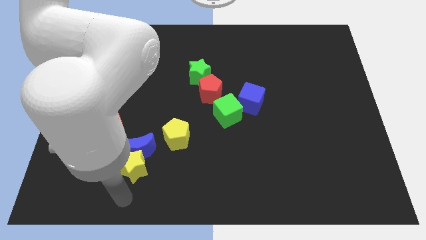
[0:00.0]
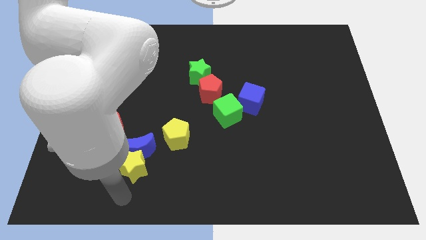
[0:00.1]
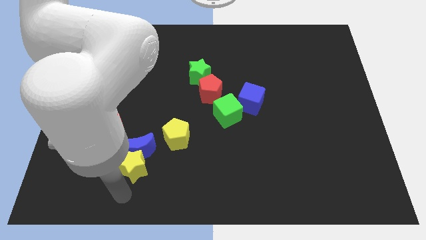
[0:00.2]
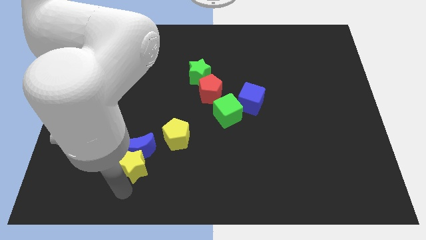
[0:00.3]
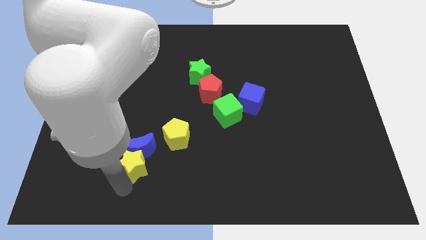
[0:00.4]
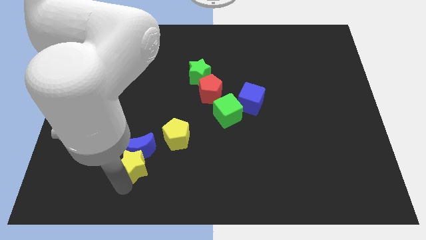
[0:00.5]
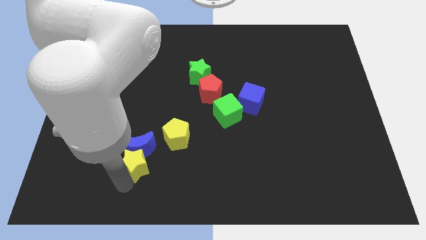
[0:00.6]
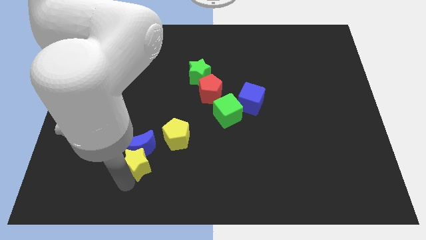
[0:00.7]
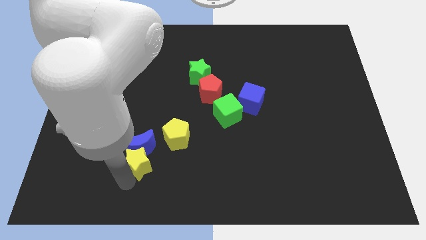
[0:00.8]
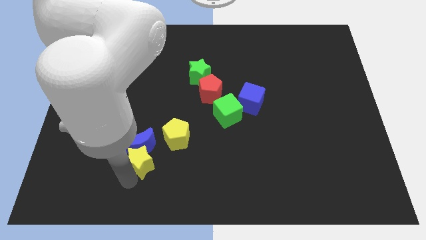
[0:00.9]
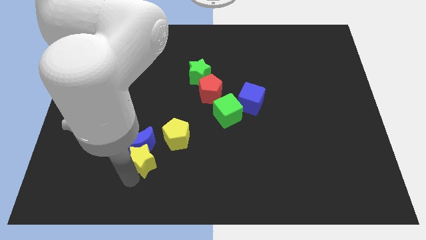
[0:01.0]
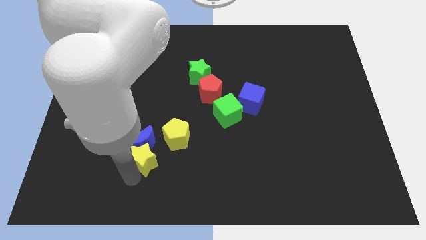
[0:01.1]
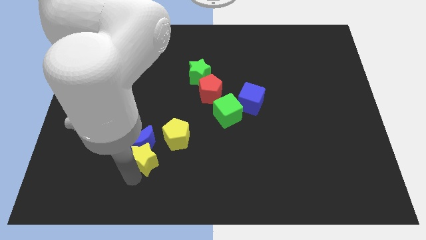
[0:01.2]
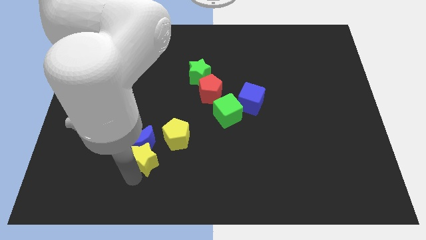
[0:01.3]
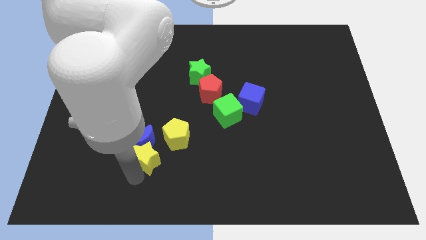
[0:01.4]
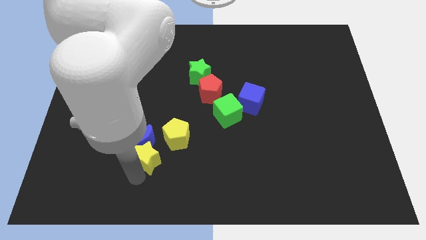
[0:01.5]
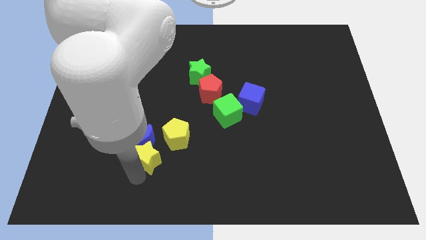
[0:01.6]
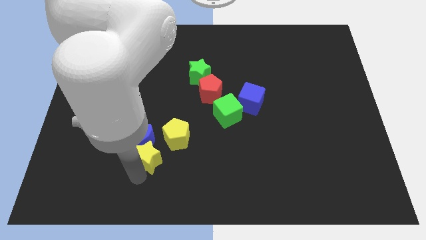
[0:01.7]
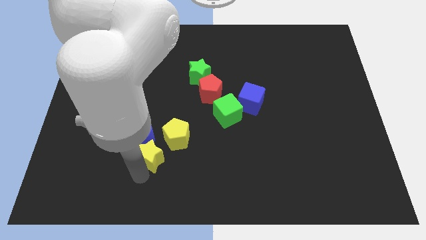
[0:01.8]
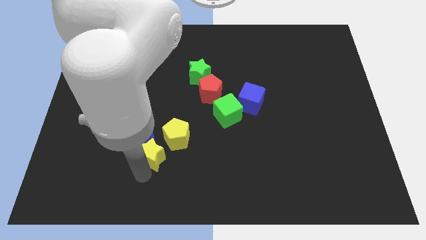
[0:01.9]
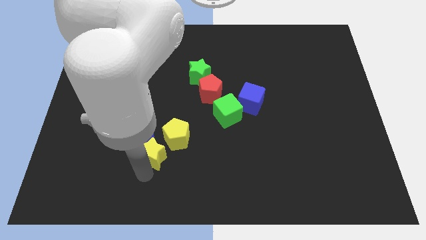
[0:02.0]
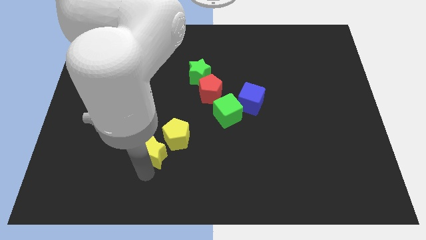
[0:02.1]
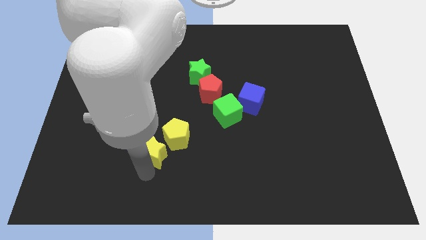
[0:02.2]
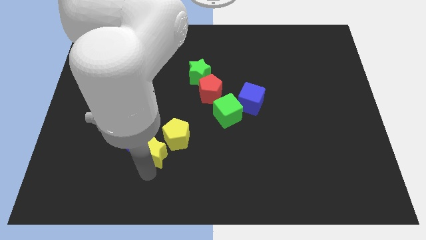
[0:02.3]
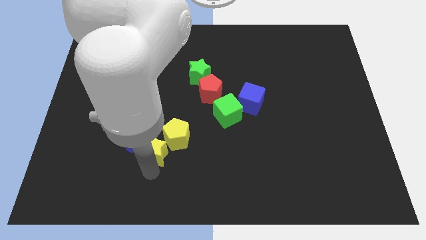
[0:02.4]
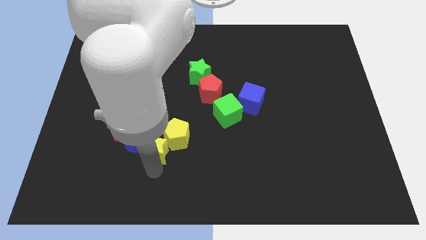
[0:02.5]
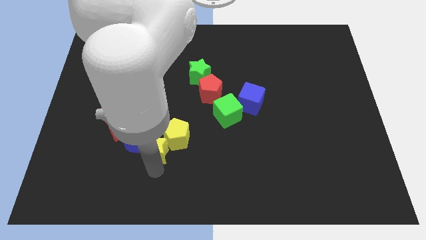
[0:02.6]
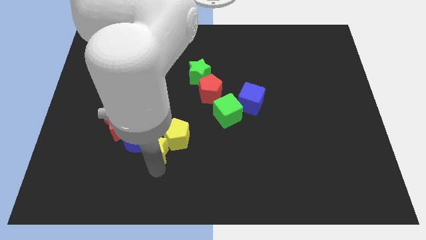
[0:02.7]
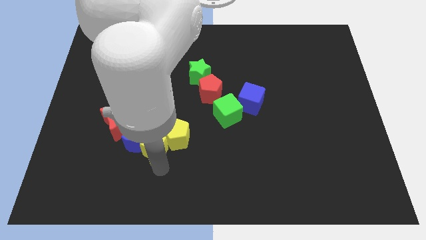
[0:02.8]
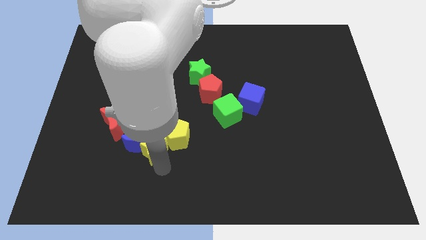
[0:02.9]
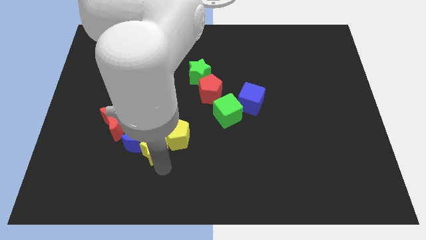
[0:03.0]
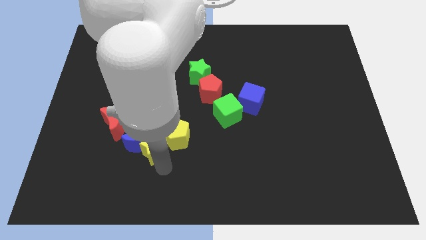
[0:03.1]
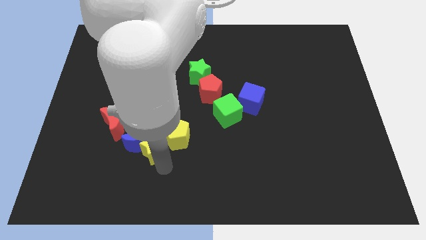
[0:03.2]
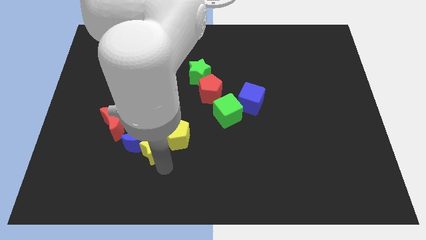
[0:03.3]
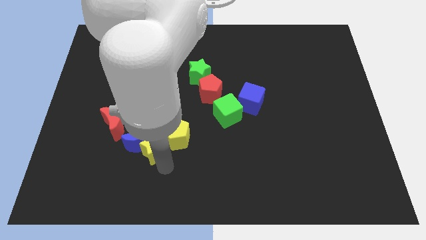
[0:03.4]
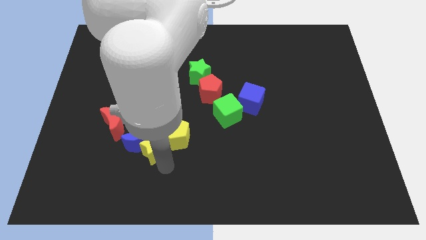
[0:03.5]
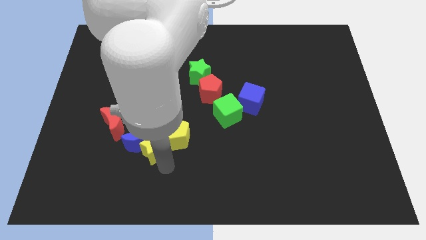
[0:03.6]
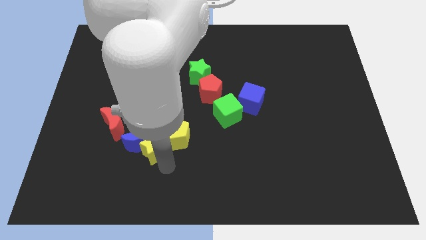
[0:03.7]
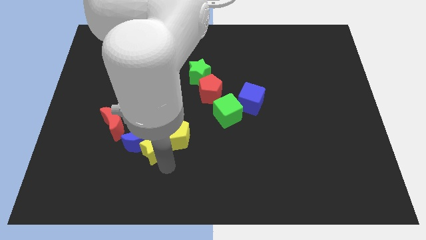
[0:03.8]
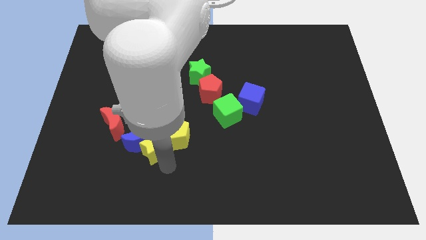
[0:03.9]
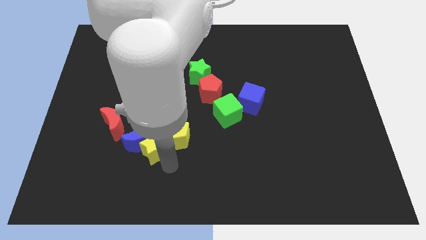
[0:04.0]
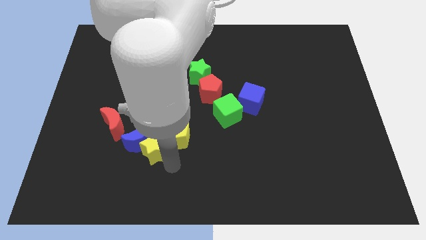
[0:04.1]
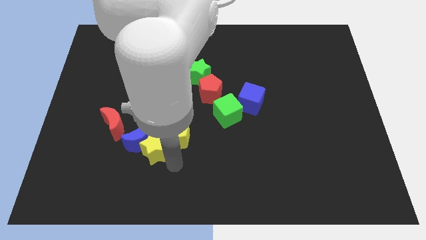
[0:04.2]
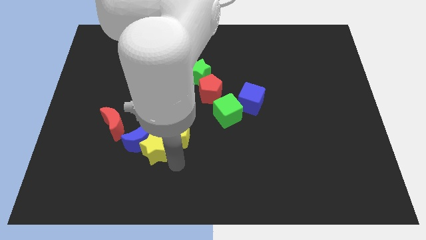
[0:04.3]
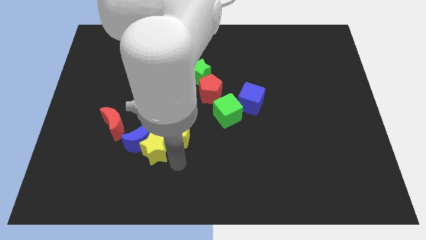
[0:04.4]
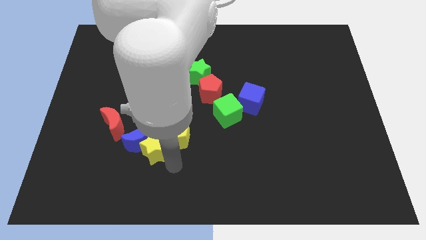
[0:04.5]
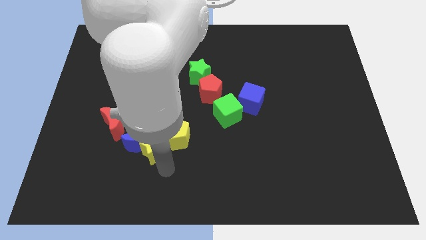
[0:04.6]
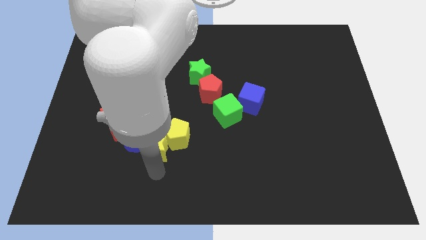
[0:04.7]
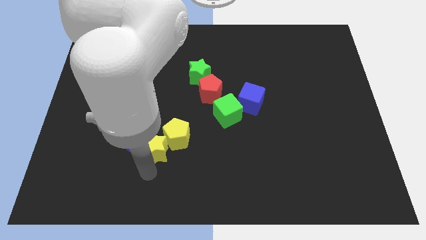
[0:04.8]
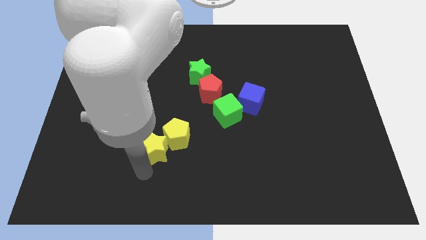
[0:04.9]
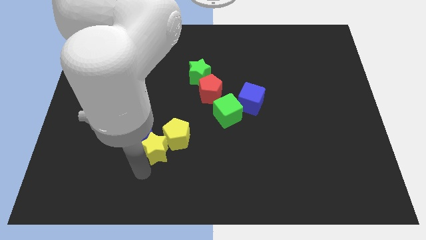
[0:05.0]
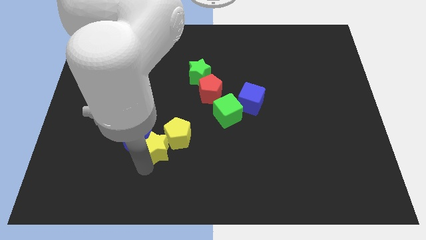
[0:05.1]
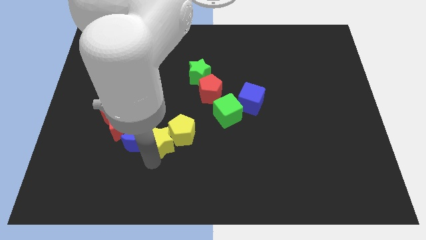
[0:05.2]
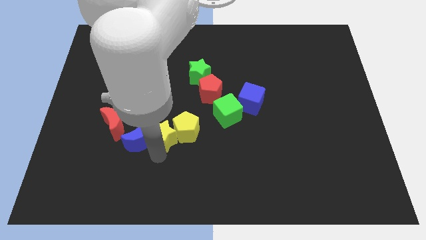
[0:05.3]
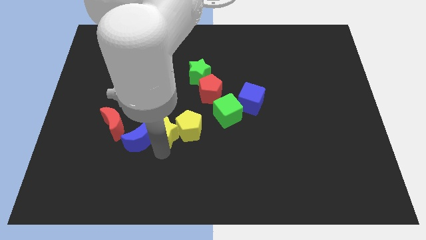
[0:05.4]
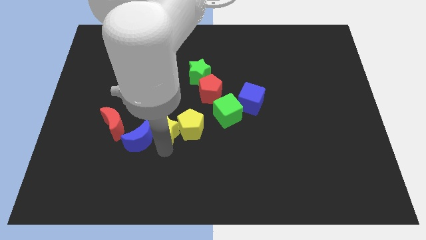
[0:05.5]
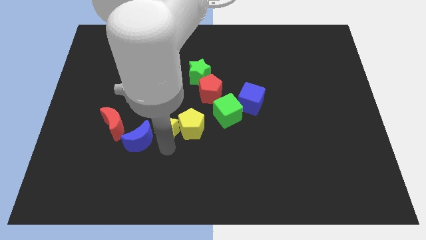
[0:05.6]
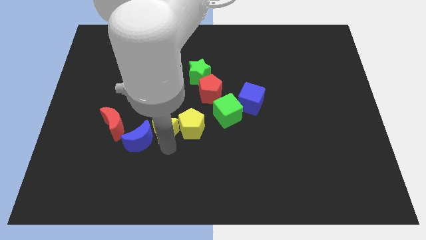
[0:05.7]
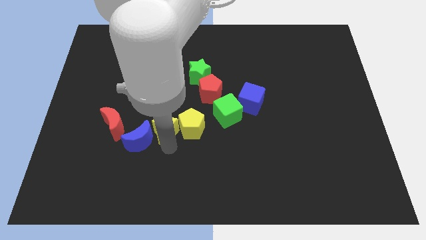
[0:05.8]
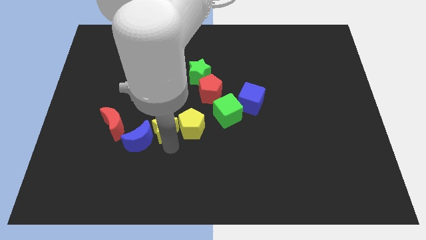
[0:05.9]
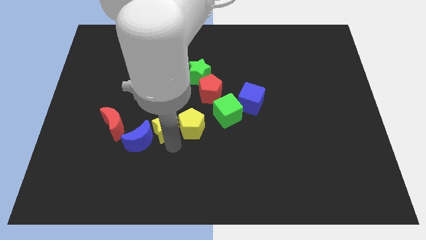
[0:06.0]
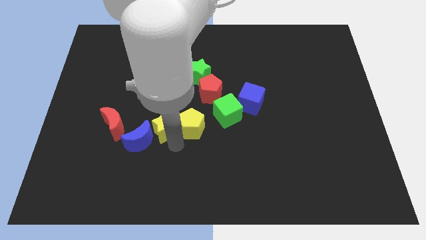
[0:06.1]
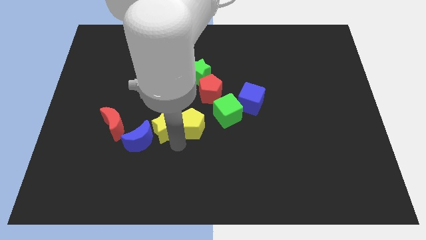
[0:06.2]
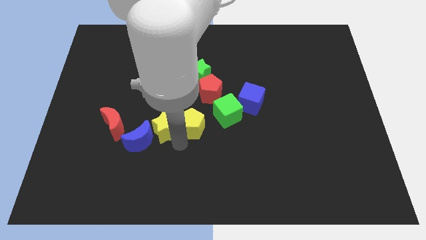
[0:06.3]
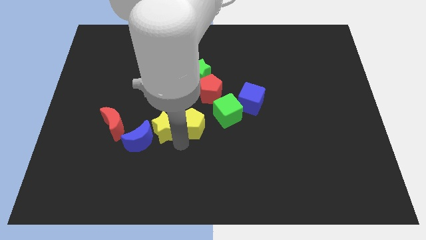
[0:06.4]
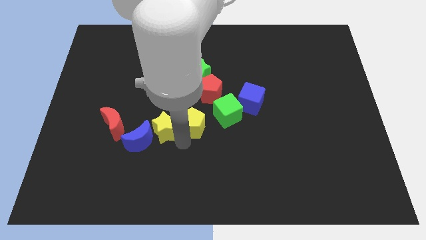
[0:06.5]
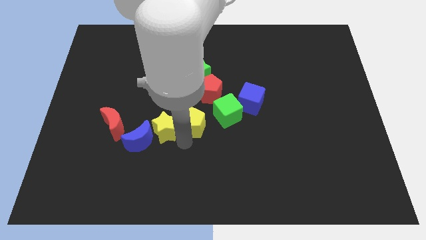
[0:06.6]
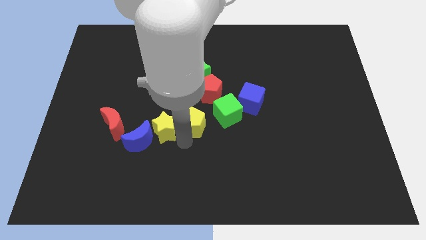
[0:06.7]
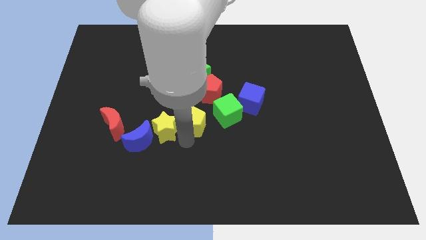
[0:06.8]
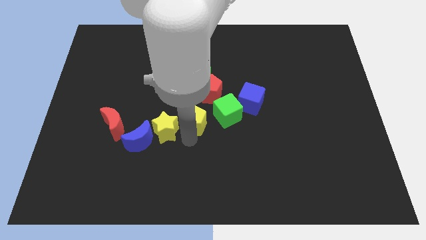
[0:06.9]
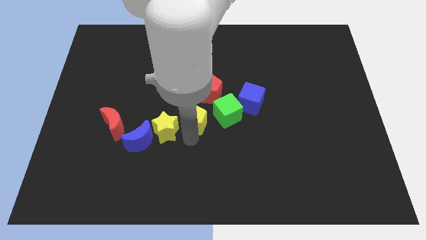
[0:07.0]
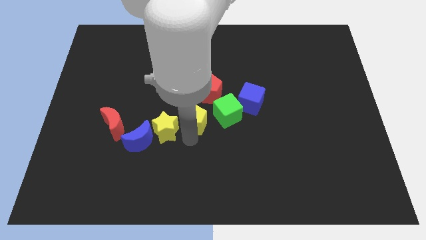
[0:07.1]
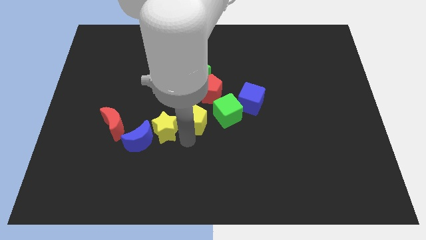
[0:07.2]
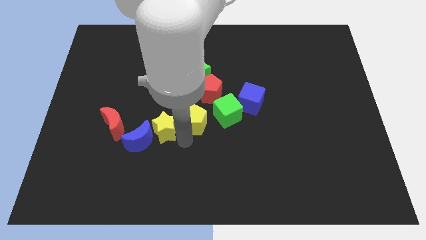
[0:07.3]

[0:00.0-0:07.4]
push the yellow star in between the yellow pentagon and blue moon

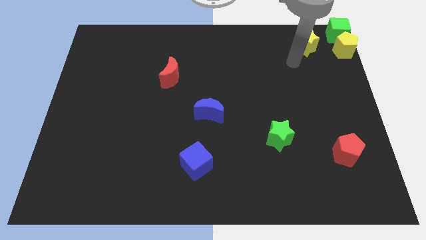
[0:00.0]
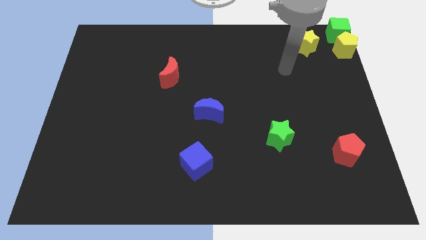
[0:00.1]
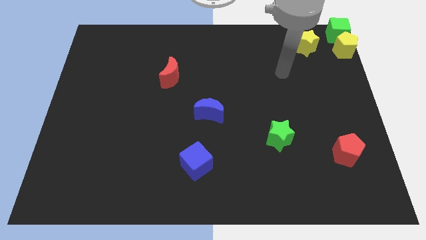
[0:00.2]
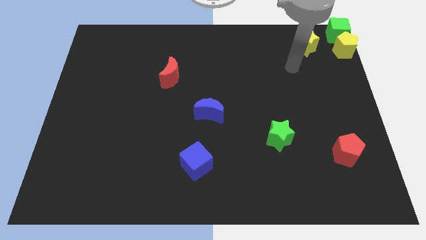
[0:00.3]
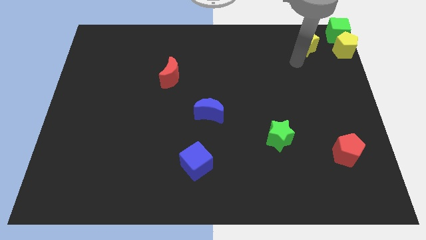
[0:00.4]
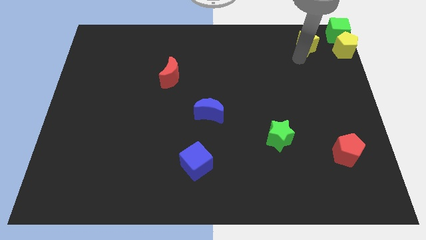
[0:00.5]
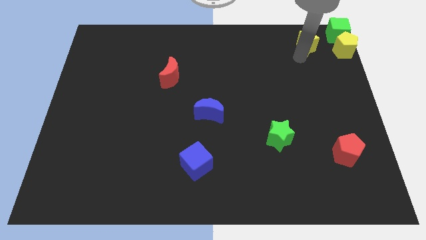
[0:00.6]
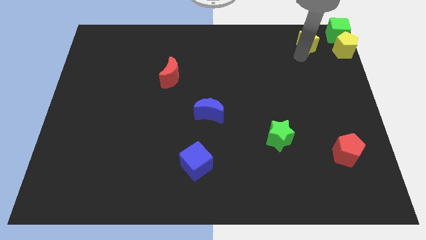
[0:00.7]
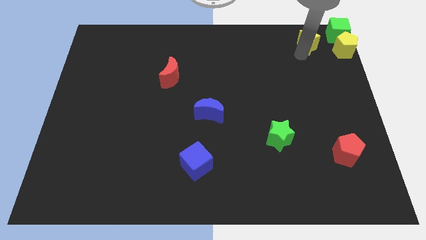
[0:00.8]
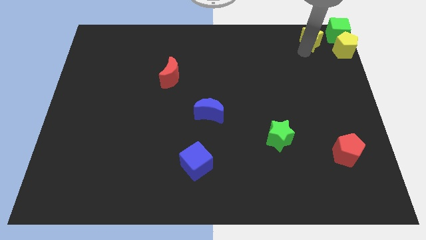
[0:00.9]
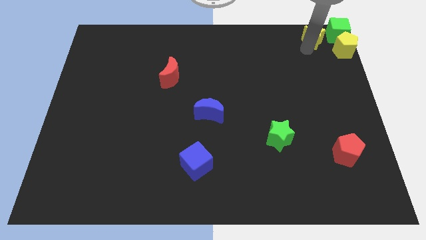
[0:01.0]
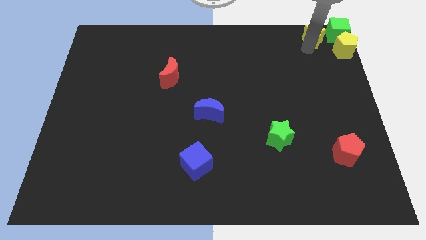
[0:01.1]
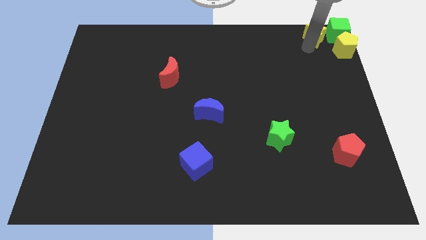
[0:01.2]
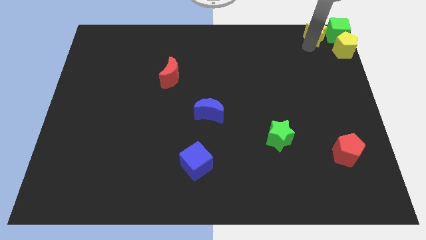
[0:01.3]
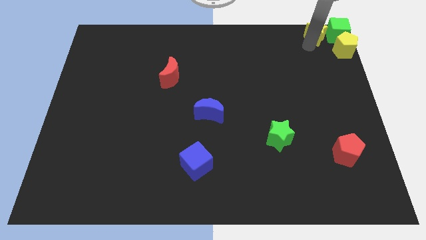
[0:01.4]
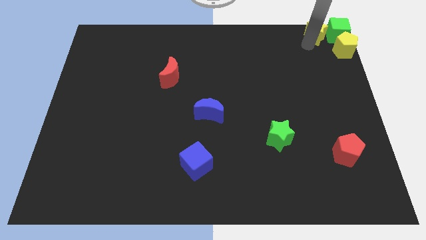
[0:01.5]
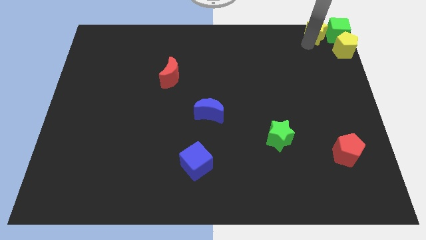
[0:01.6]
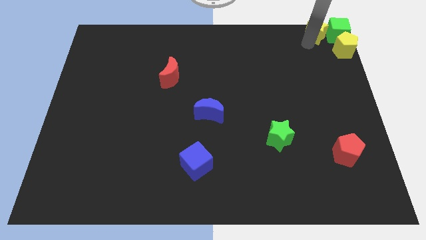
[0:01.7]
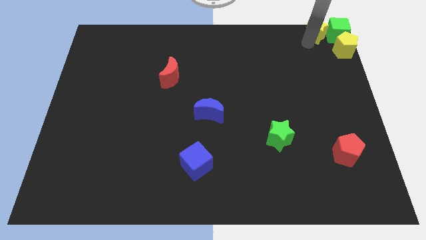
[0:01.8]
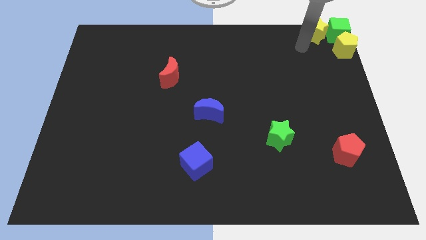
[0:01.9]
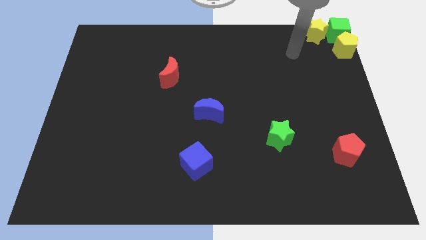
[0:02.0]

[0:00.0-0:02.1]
move the yellow star to the top right corner
